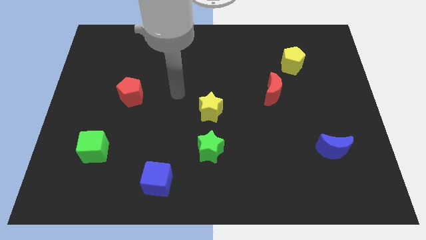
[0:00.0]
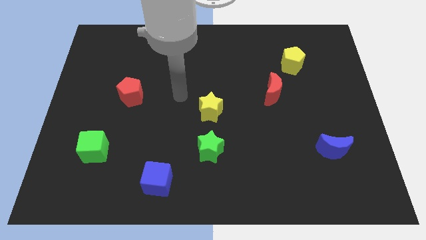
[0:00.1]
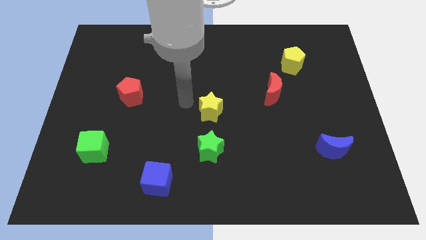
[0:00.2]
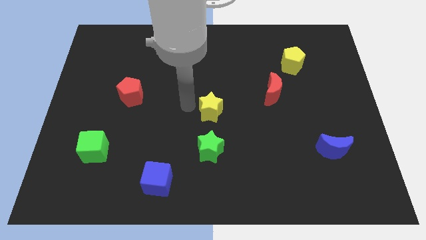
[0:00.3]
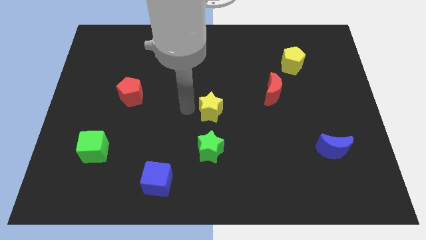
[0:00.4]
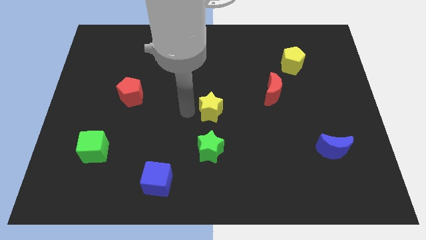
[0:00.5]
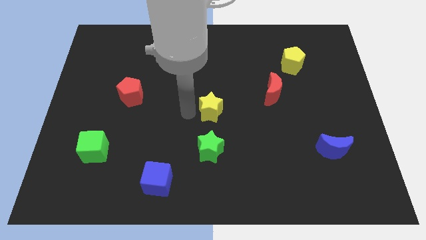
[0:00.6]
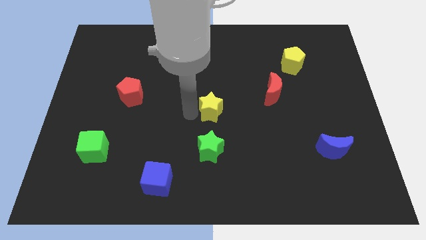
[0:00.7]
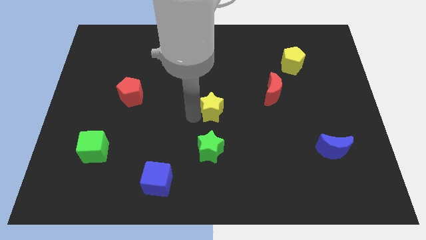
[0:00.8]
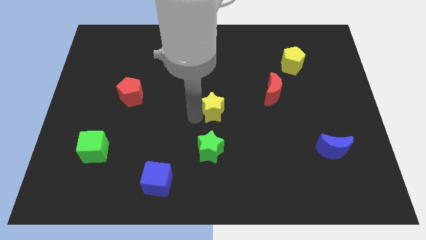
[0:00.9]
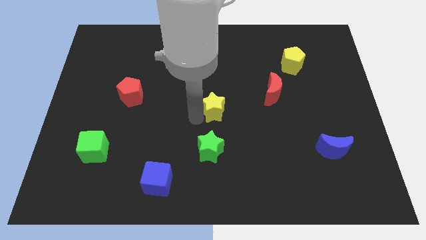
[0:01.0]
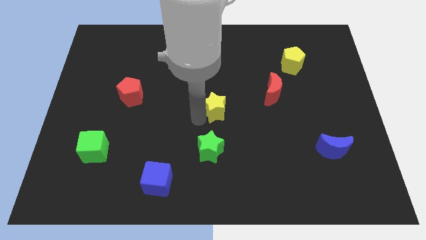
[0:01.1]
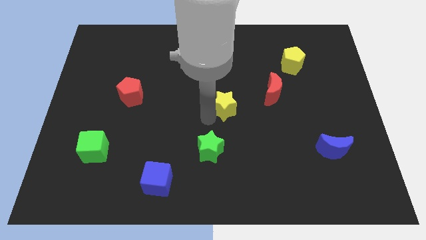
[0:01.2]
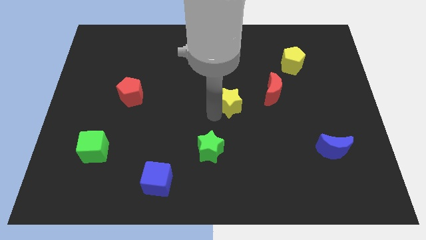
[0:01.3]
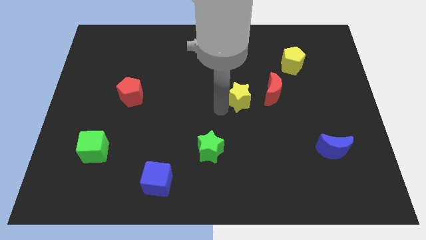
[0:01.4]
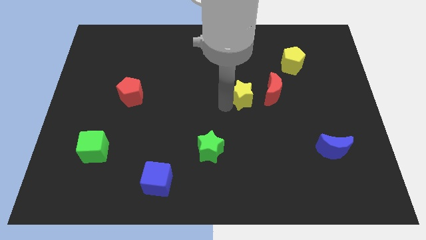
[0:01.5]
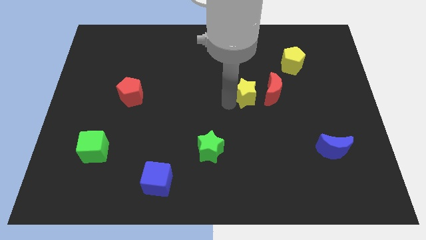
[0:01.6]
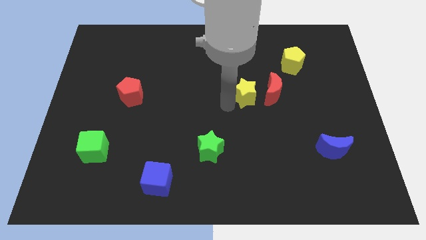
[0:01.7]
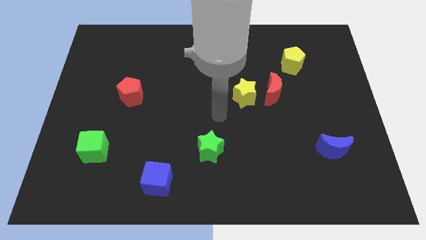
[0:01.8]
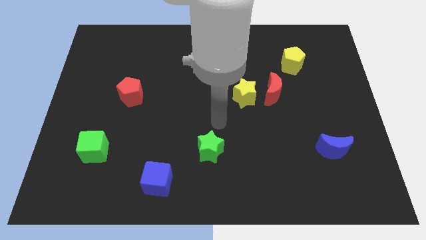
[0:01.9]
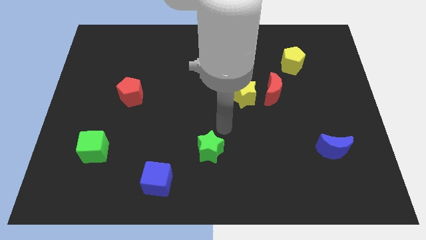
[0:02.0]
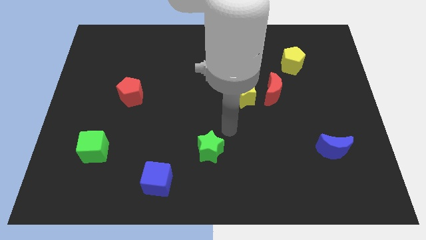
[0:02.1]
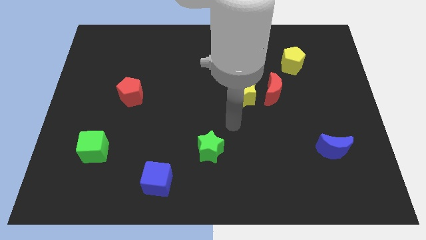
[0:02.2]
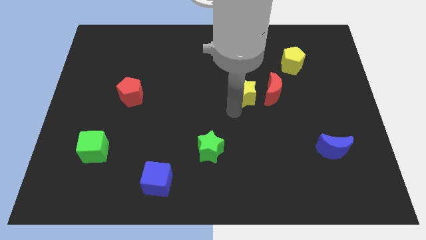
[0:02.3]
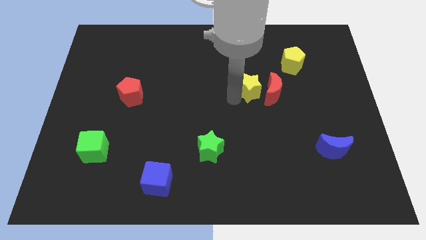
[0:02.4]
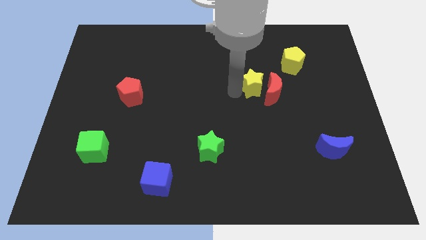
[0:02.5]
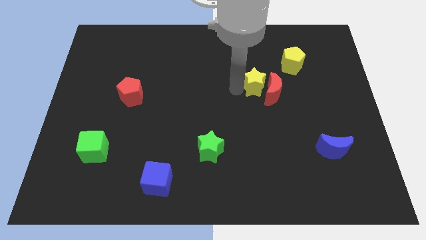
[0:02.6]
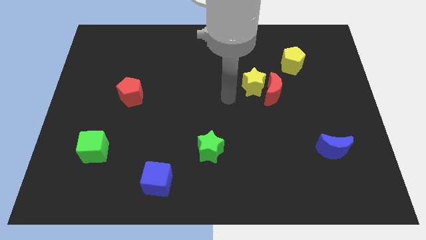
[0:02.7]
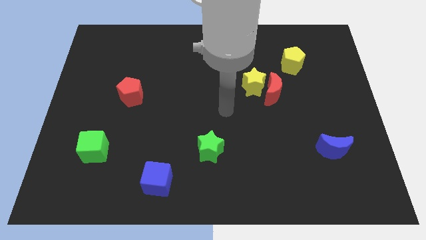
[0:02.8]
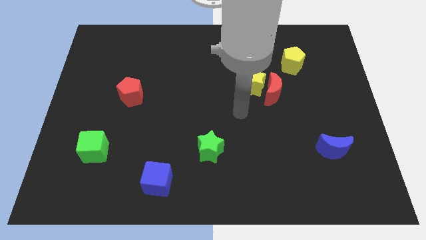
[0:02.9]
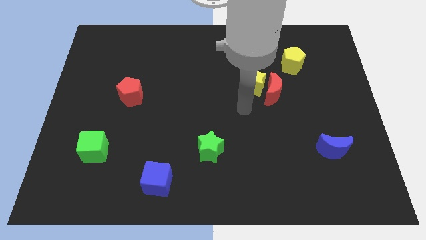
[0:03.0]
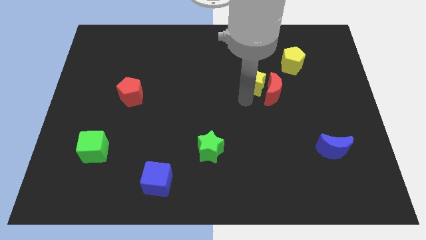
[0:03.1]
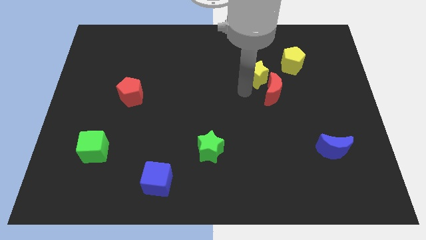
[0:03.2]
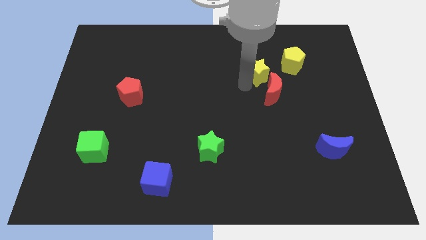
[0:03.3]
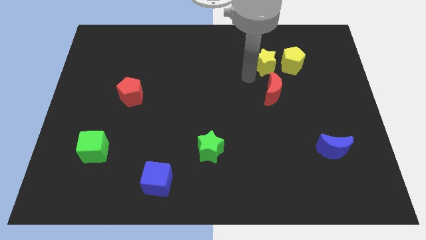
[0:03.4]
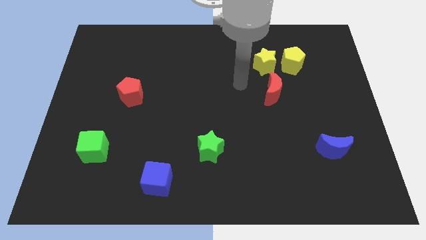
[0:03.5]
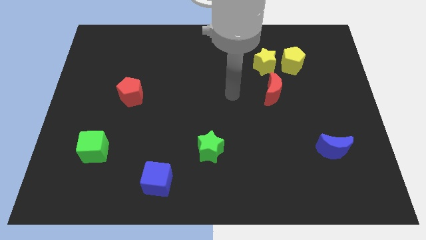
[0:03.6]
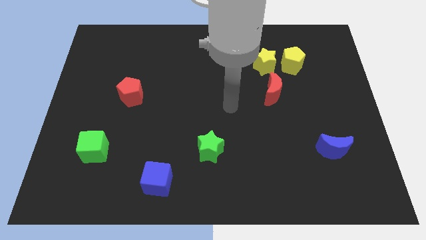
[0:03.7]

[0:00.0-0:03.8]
push the yellow star to the left side of the yellow pentagon

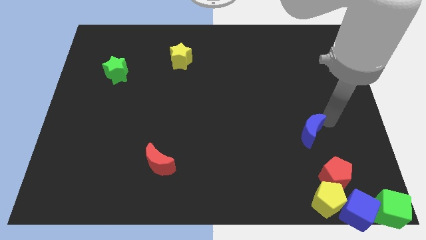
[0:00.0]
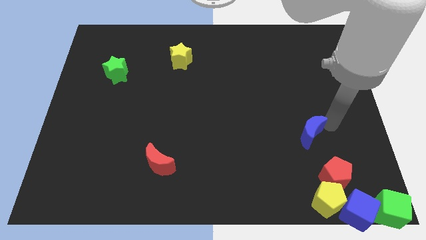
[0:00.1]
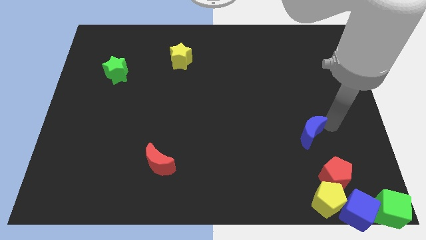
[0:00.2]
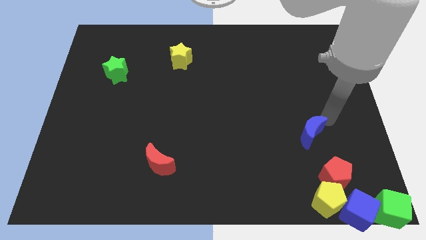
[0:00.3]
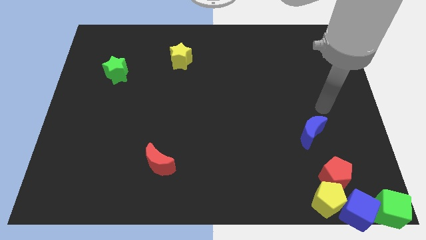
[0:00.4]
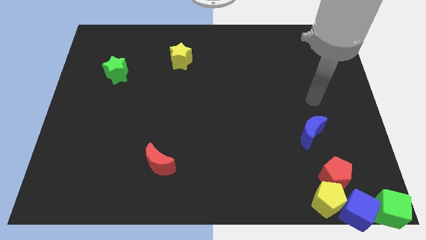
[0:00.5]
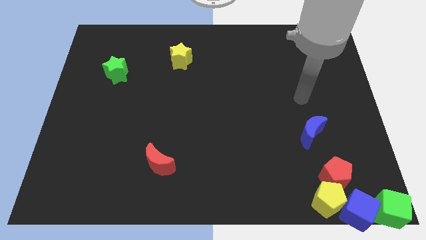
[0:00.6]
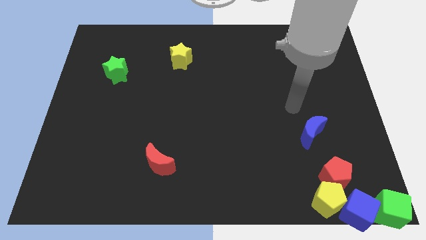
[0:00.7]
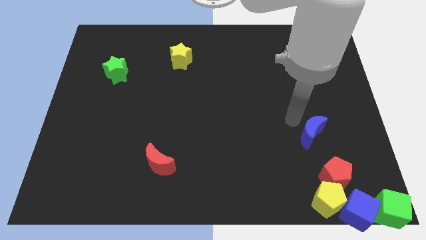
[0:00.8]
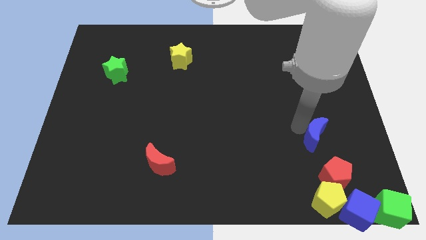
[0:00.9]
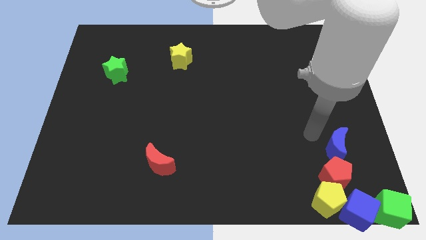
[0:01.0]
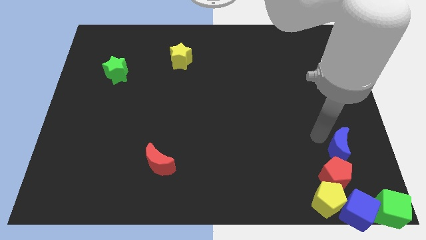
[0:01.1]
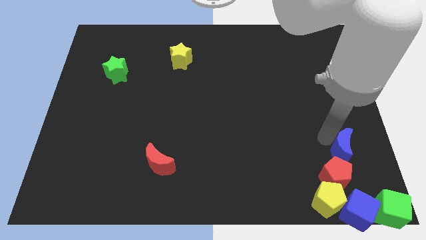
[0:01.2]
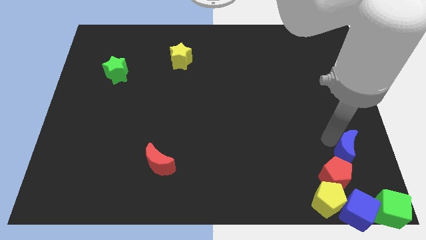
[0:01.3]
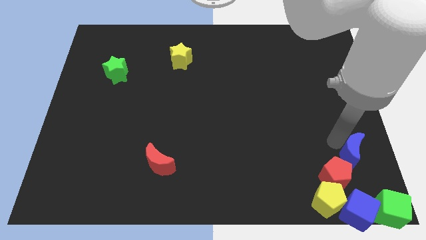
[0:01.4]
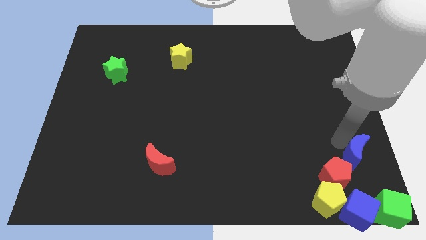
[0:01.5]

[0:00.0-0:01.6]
place the blue moon above the red pentagon

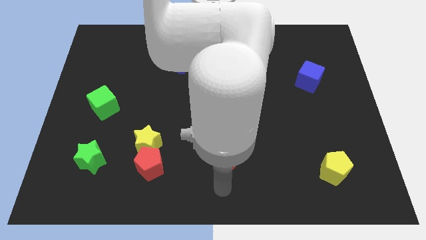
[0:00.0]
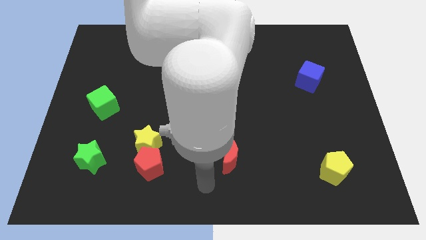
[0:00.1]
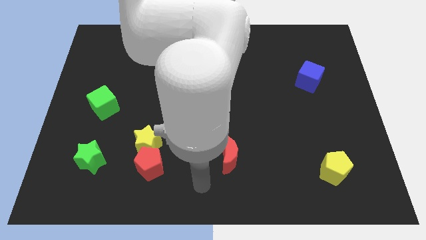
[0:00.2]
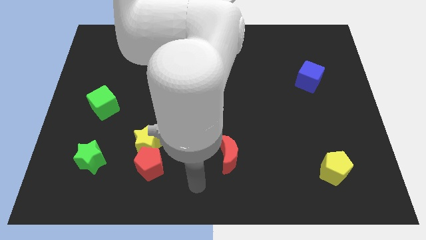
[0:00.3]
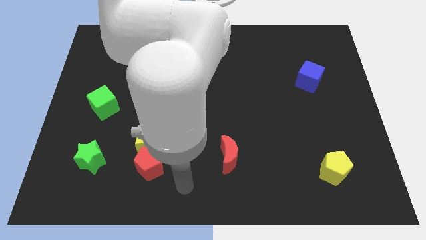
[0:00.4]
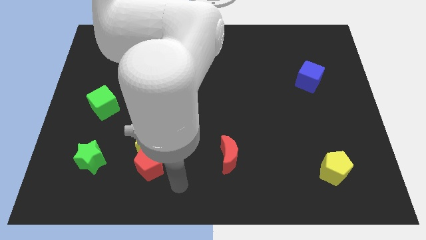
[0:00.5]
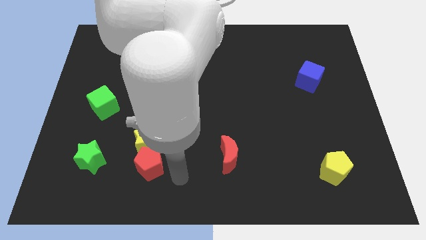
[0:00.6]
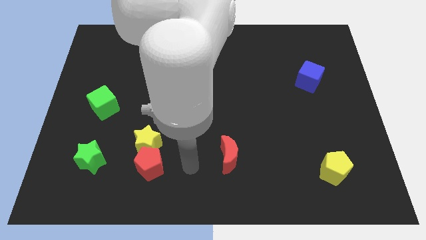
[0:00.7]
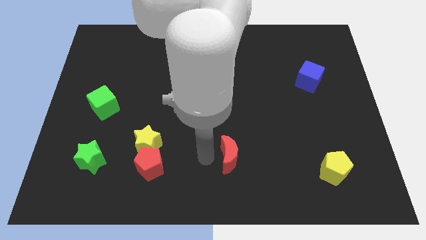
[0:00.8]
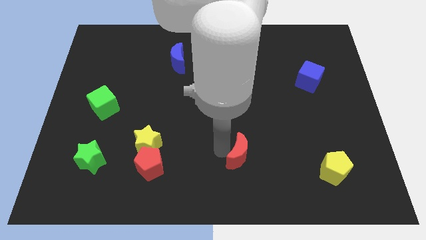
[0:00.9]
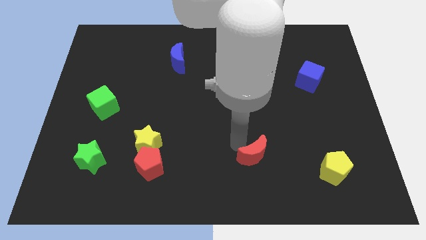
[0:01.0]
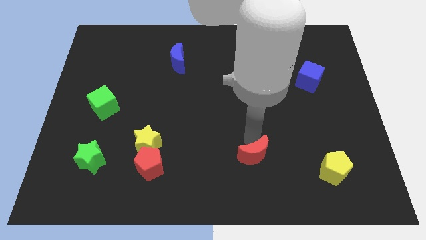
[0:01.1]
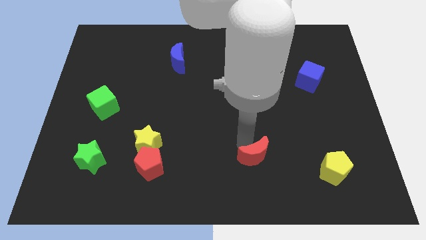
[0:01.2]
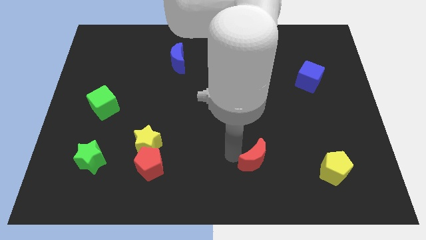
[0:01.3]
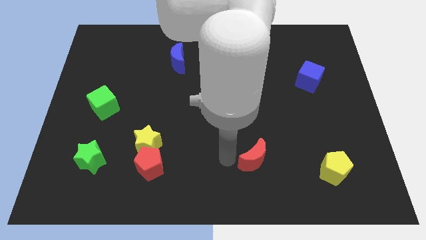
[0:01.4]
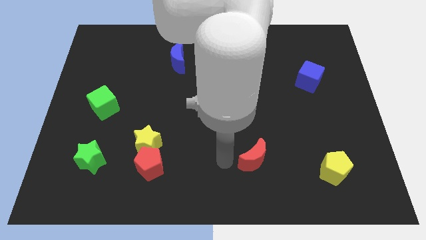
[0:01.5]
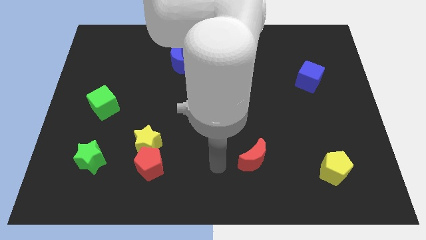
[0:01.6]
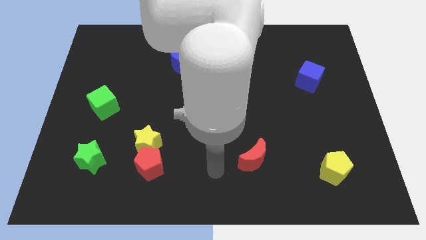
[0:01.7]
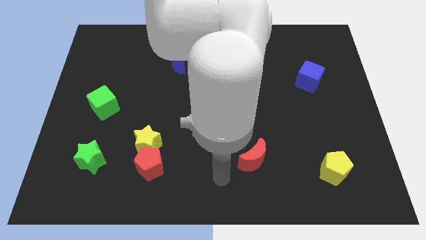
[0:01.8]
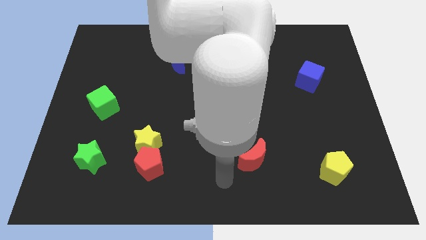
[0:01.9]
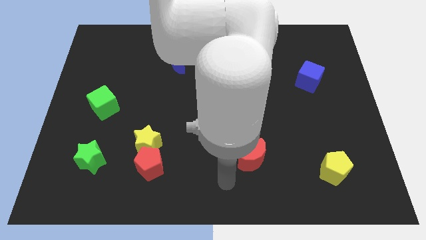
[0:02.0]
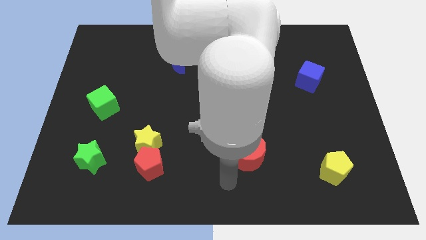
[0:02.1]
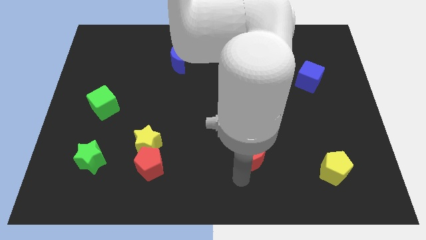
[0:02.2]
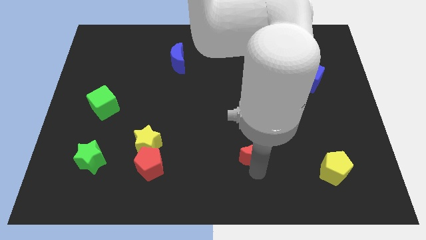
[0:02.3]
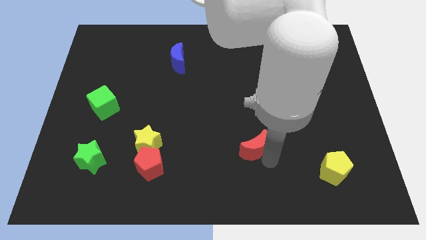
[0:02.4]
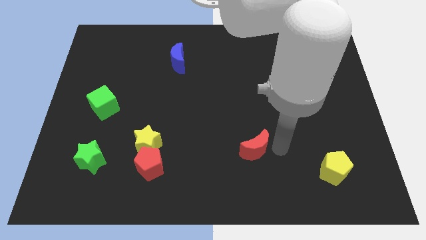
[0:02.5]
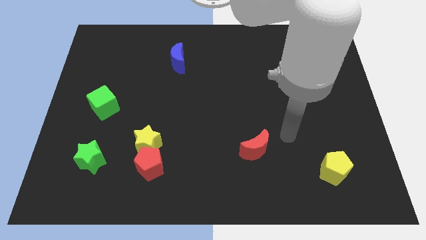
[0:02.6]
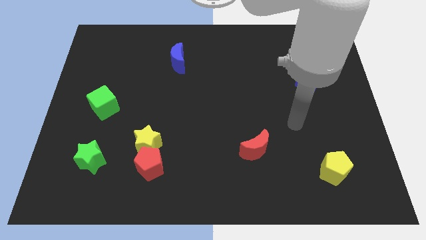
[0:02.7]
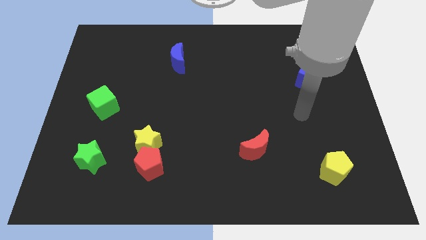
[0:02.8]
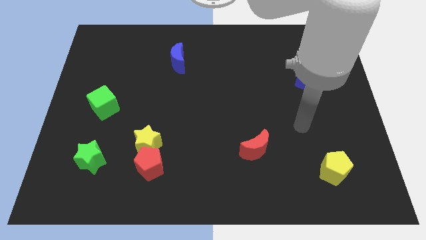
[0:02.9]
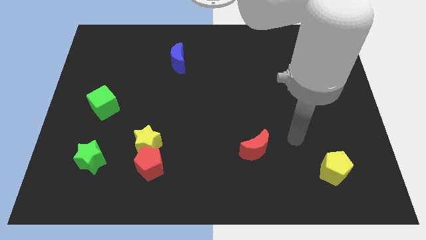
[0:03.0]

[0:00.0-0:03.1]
move red moon to the top left of yellow pentagon

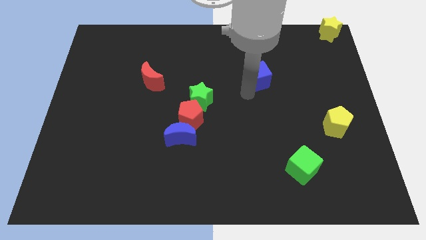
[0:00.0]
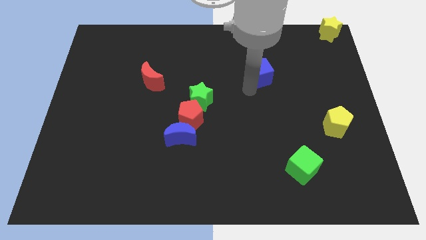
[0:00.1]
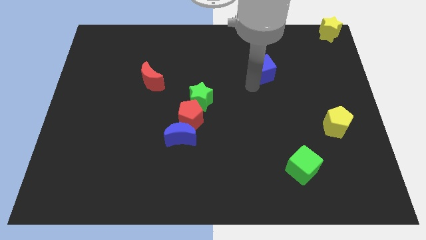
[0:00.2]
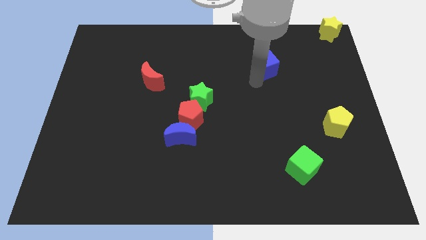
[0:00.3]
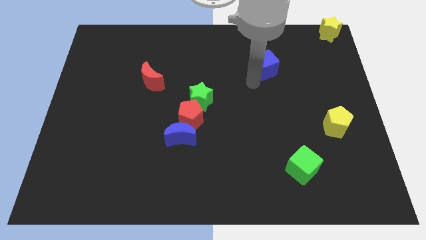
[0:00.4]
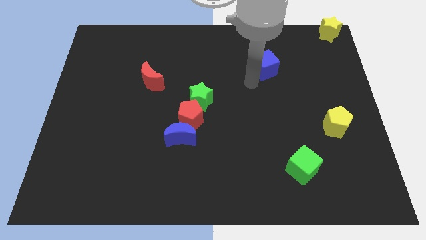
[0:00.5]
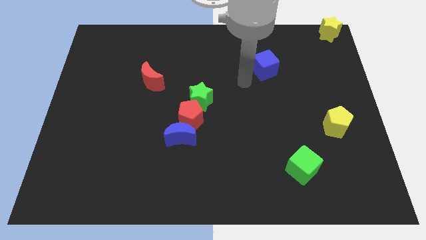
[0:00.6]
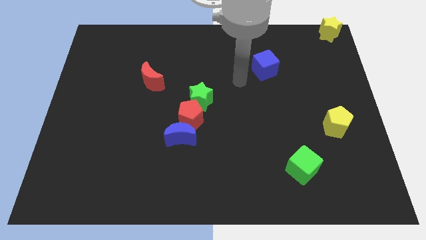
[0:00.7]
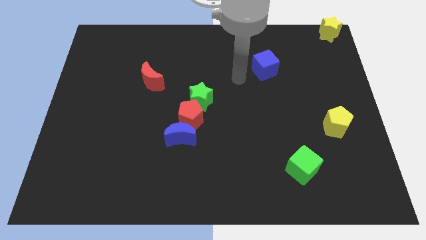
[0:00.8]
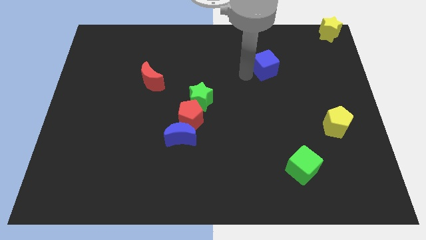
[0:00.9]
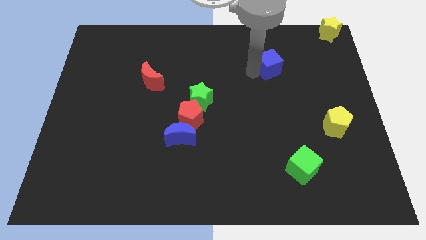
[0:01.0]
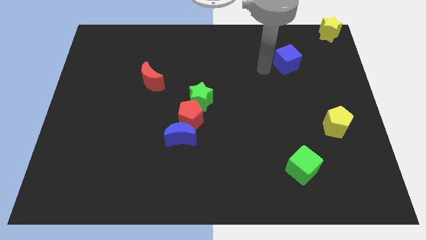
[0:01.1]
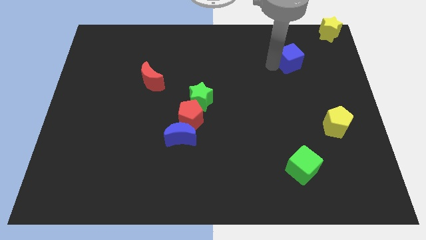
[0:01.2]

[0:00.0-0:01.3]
push blue cube towards the yellow star
